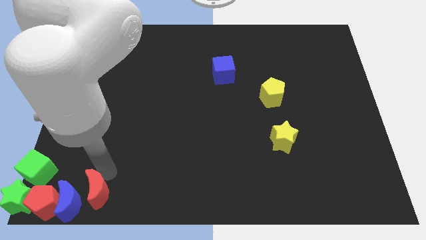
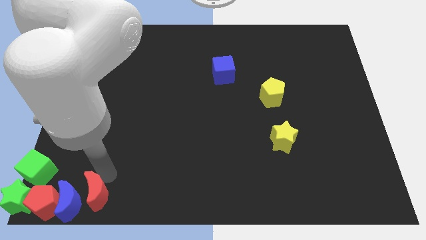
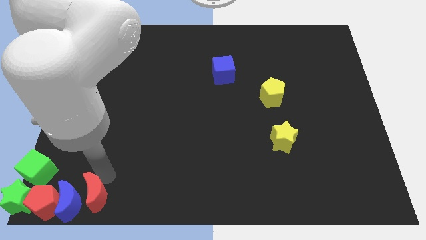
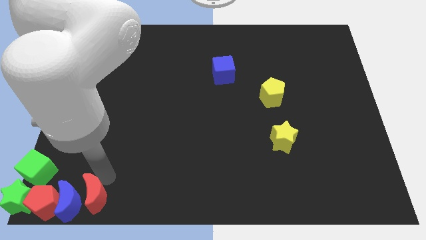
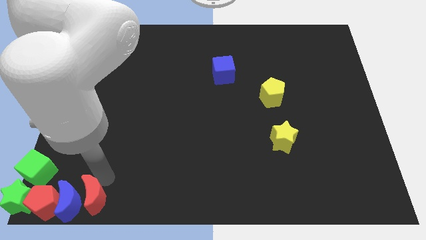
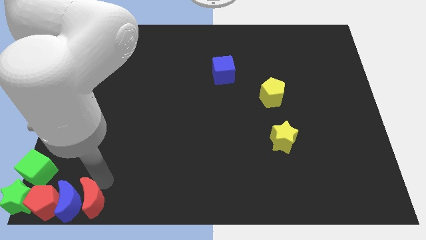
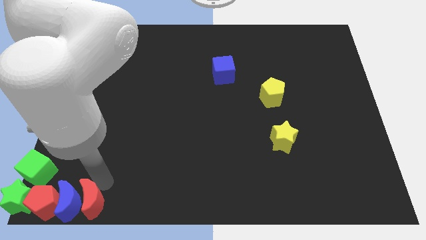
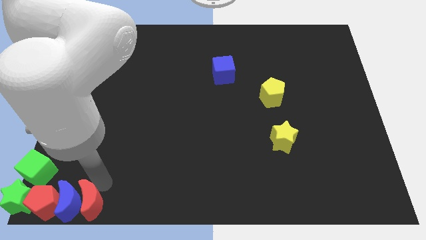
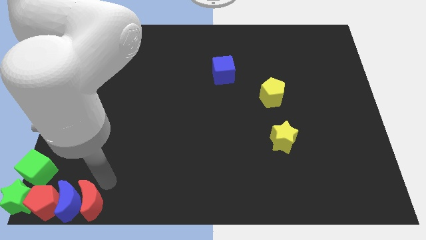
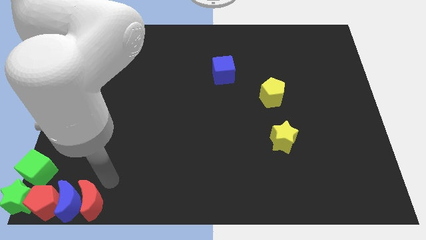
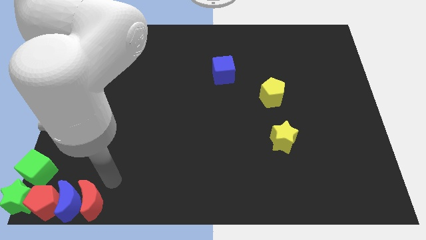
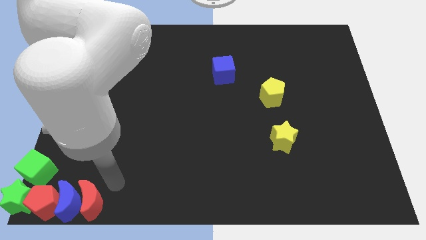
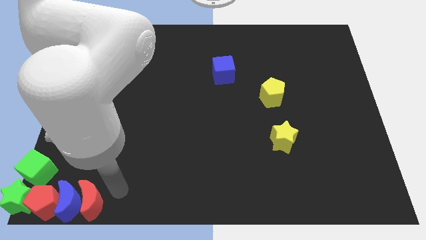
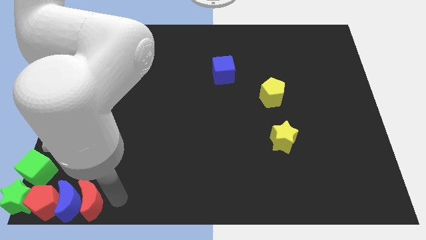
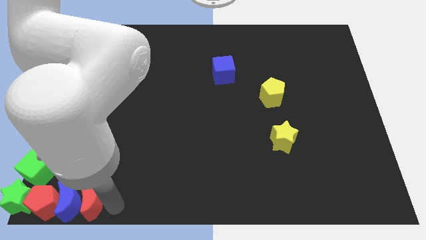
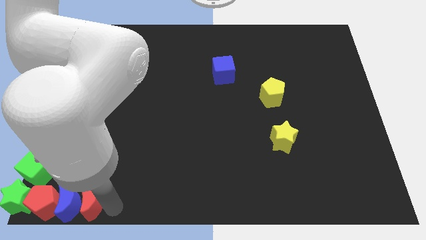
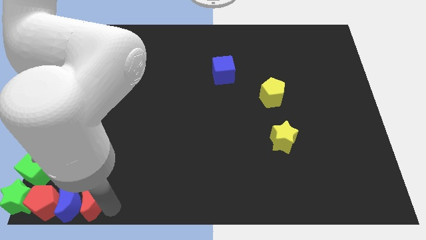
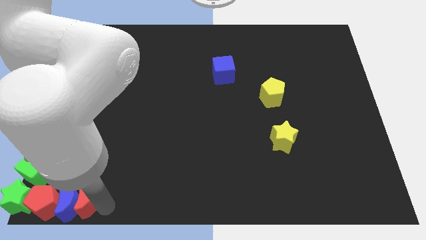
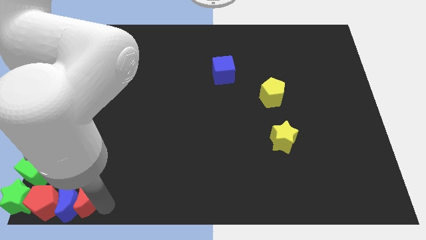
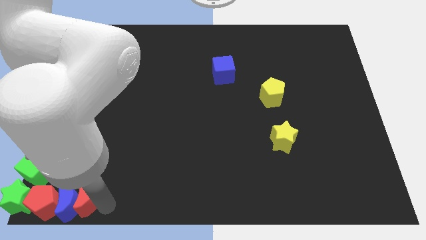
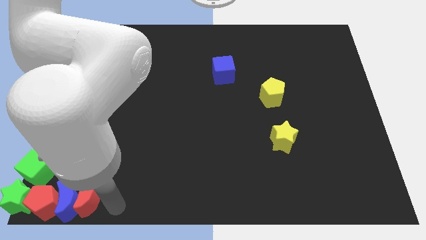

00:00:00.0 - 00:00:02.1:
push the red crescent into the blue crescent

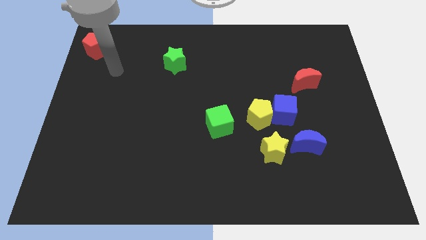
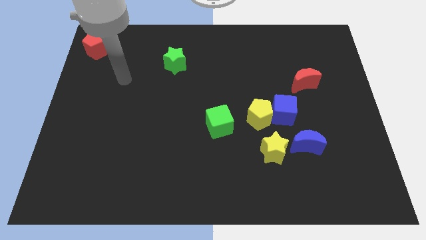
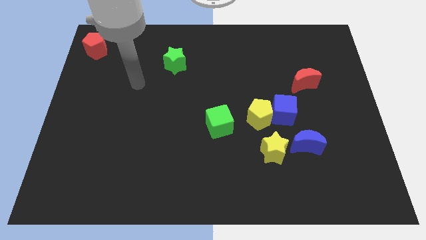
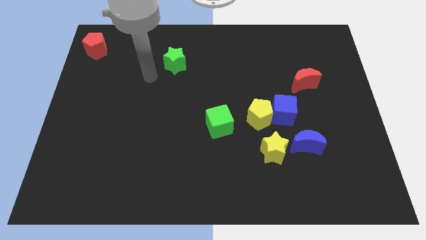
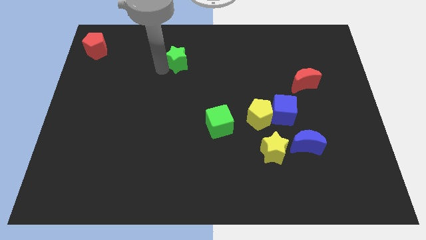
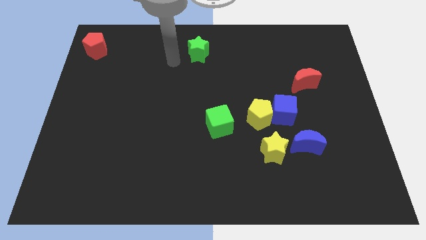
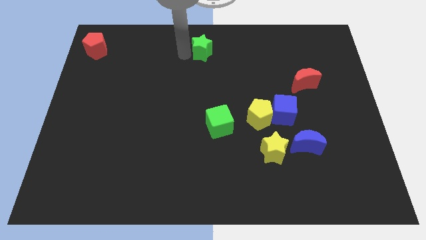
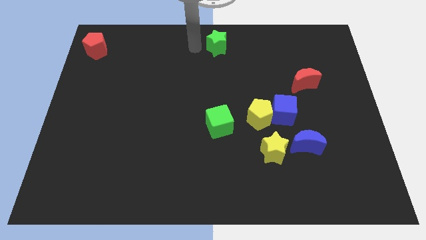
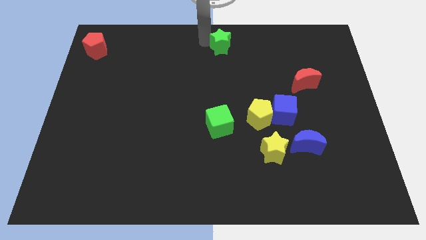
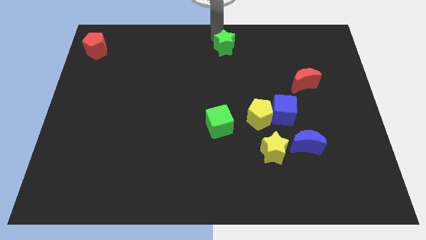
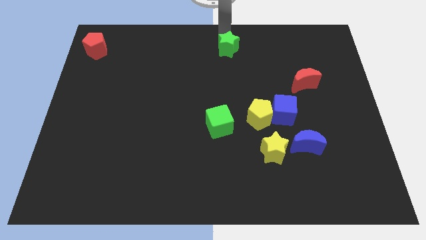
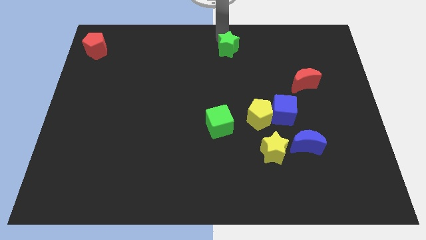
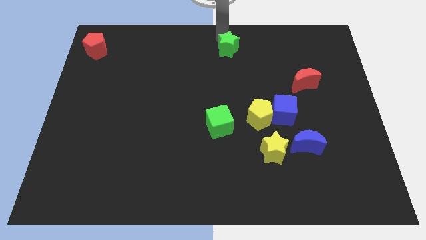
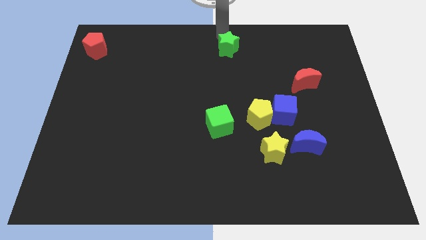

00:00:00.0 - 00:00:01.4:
push the green star to the top center of the board

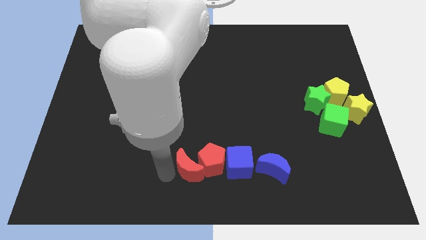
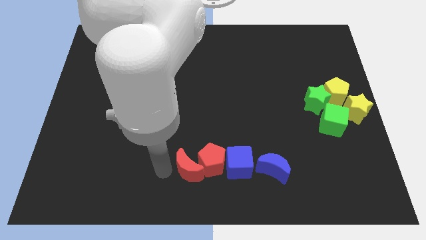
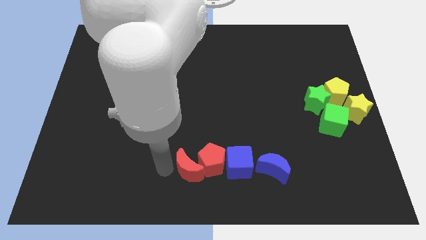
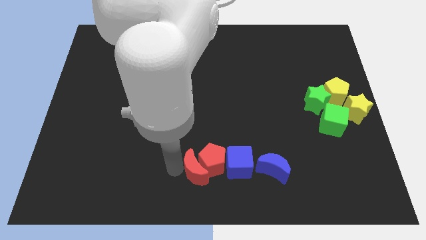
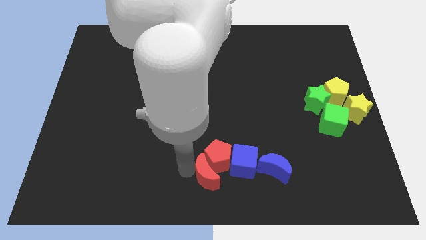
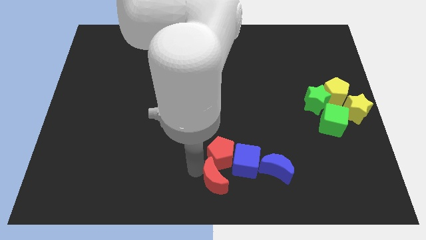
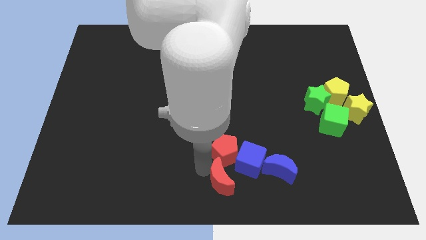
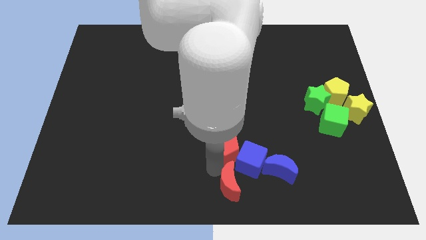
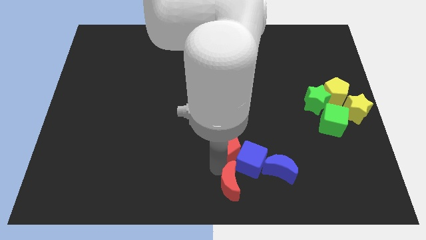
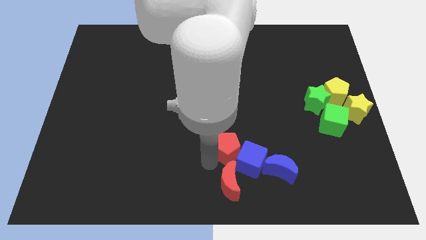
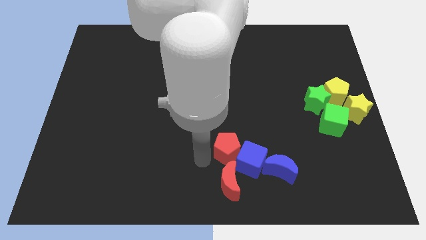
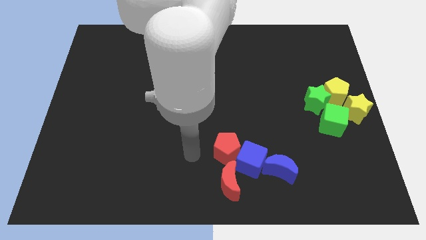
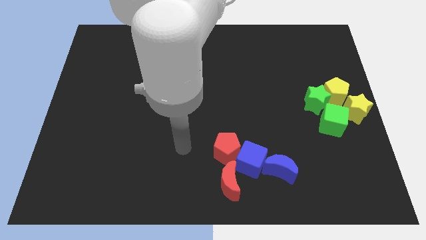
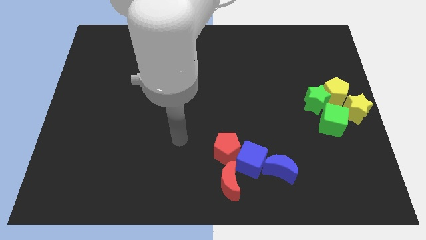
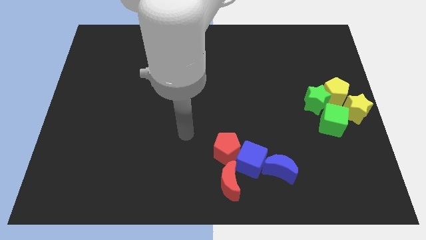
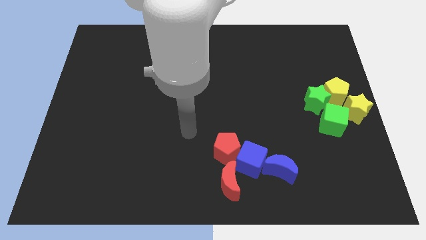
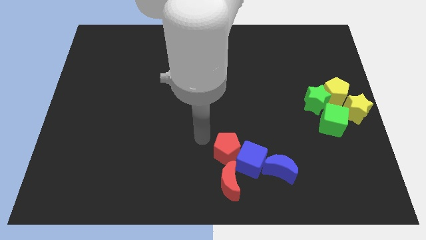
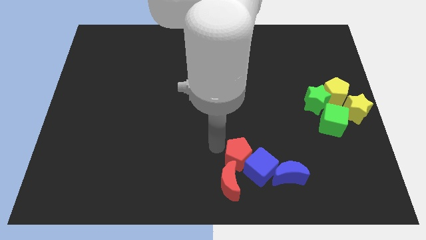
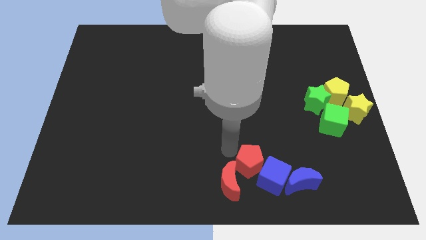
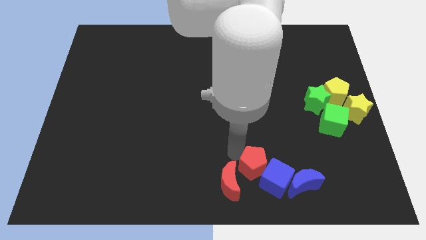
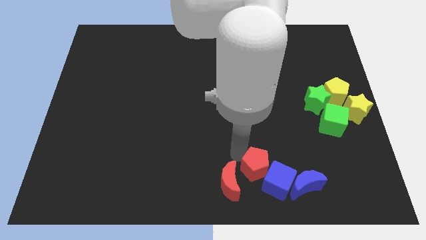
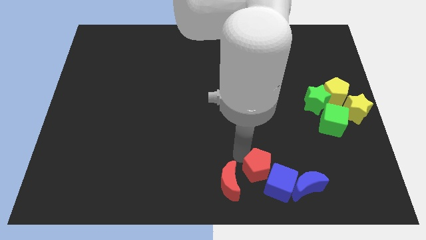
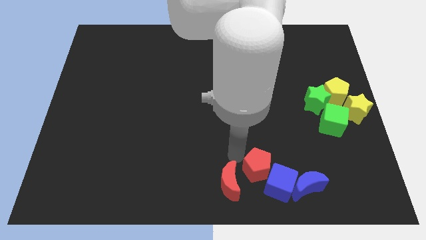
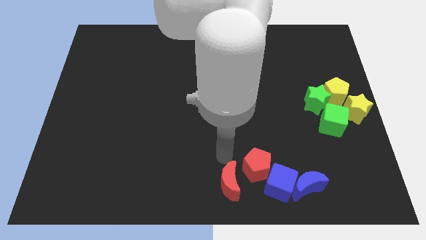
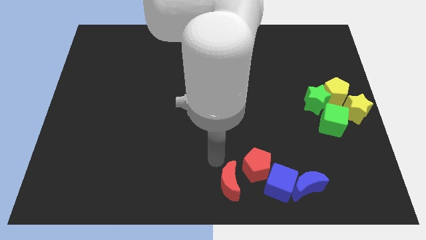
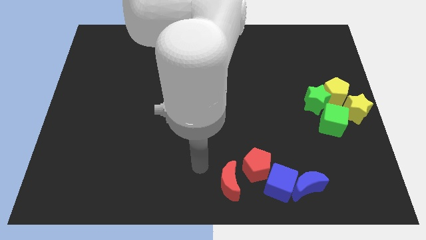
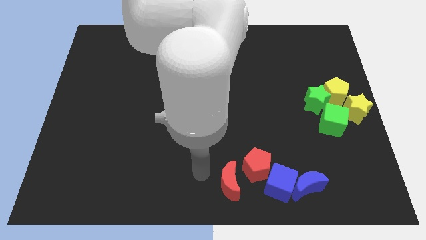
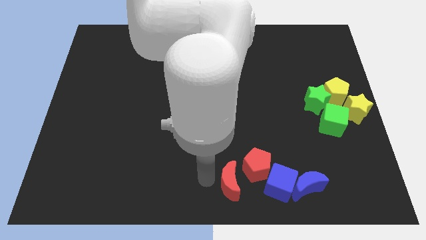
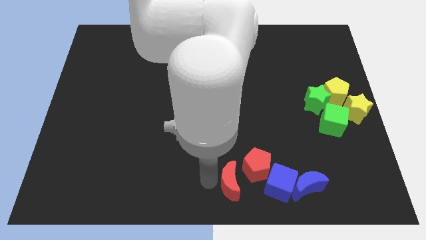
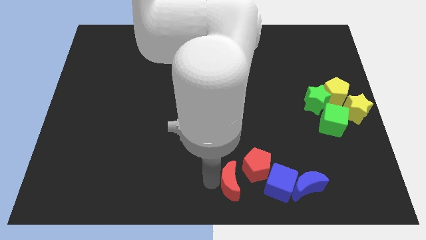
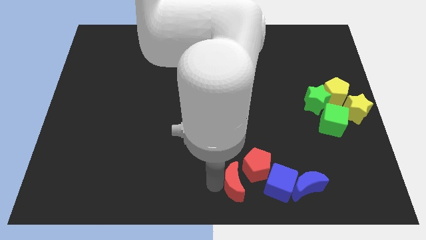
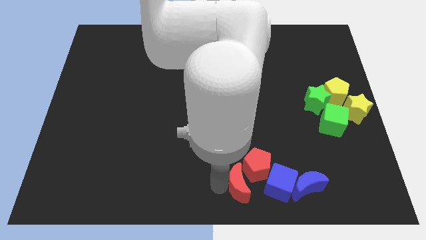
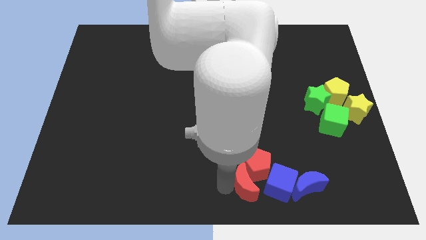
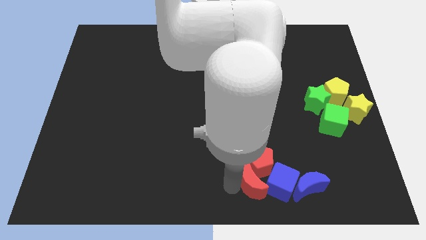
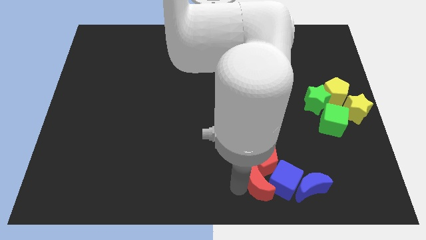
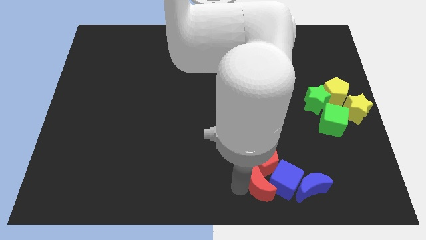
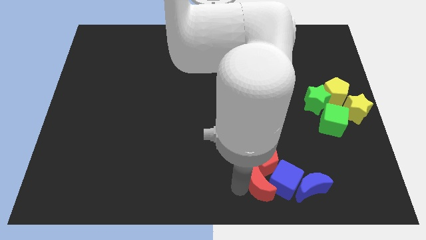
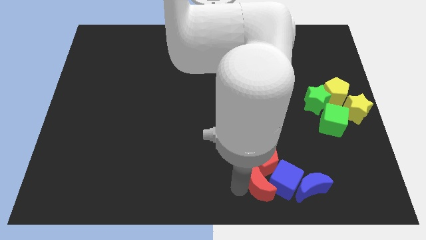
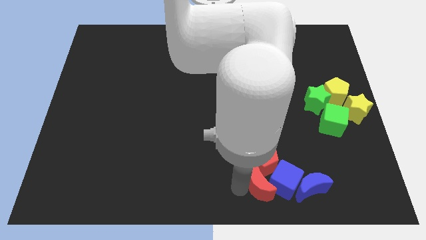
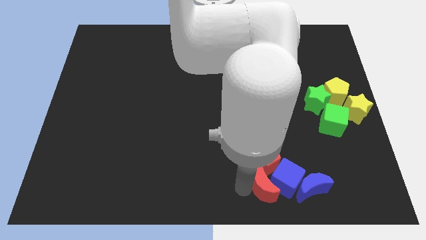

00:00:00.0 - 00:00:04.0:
move all red and blue blocks slightly to right

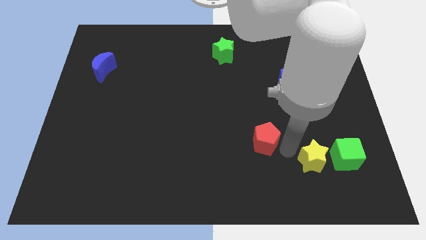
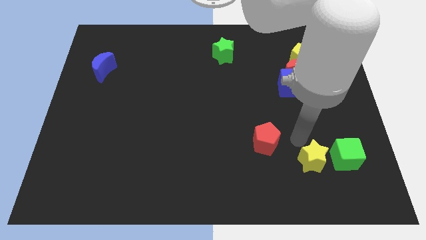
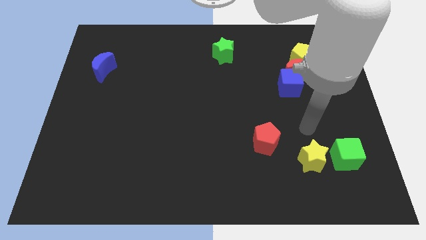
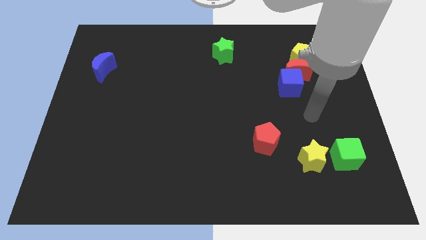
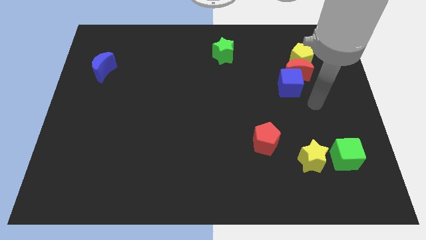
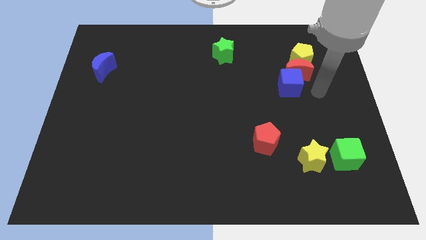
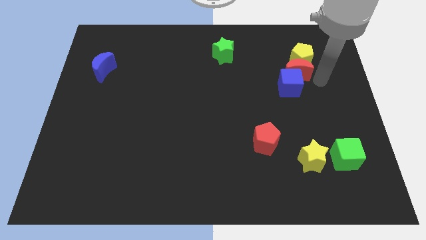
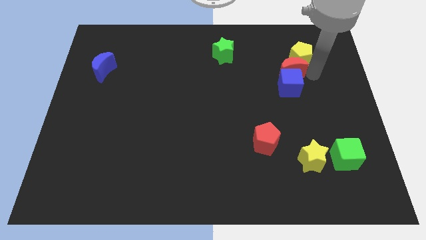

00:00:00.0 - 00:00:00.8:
slightly move the red crescent to the left of the board

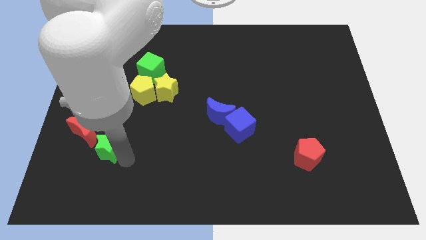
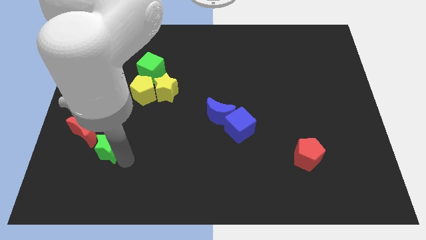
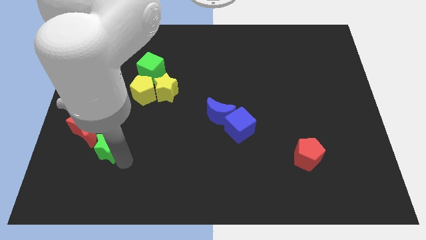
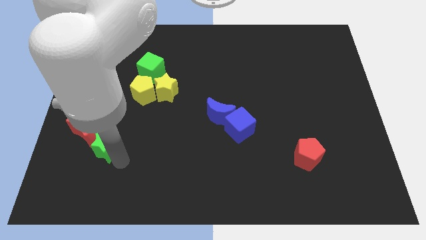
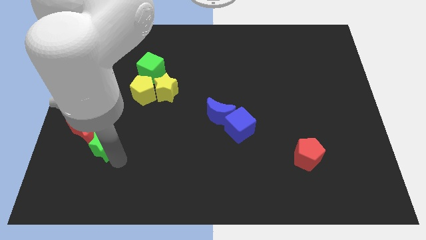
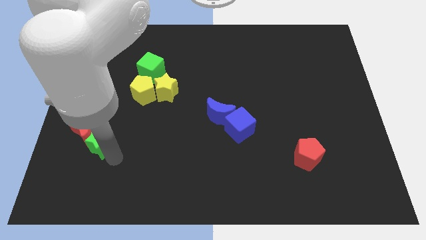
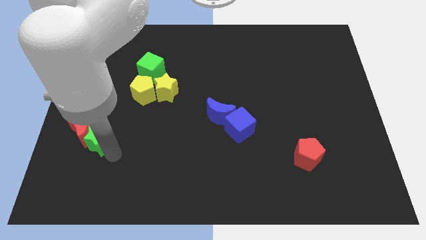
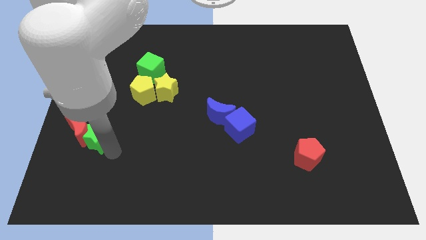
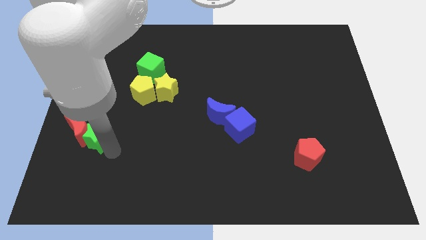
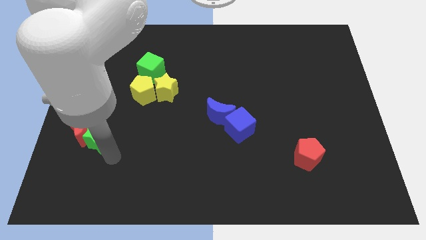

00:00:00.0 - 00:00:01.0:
push the green star to the red crescent
